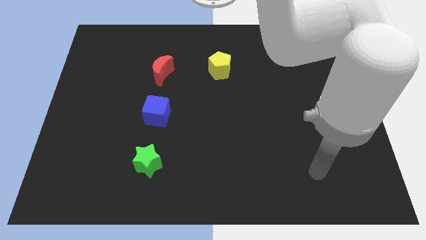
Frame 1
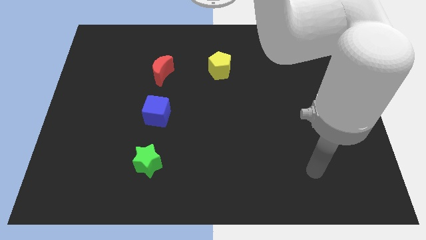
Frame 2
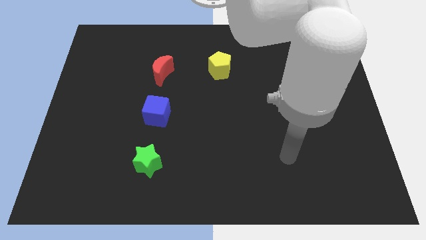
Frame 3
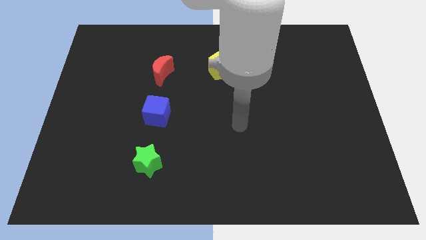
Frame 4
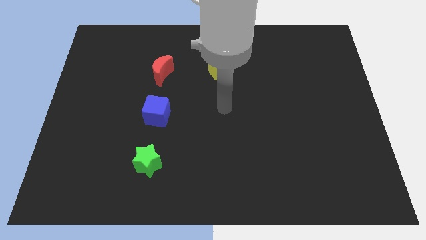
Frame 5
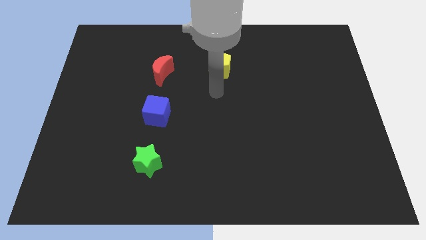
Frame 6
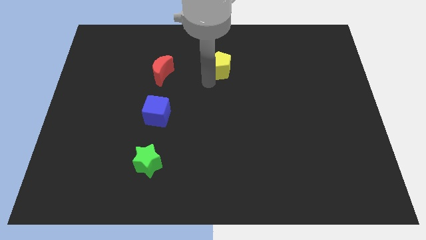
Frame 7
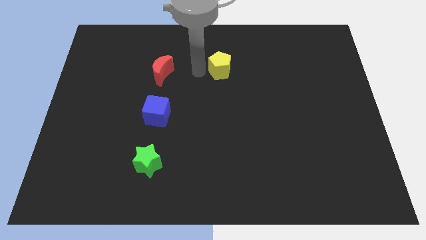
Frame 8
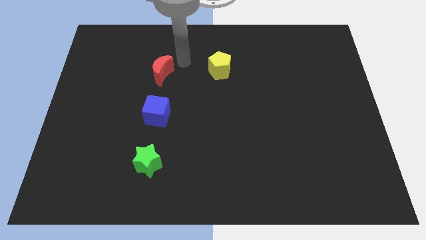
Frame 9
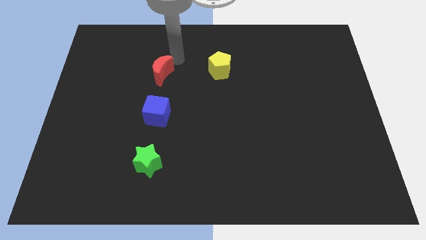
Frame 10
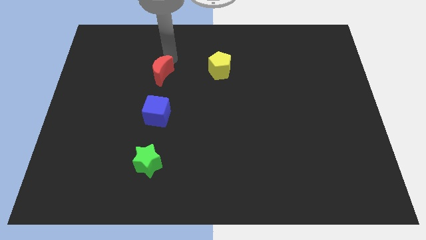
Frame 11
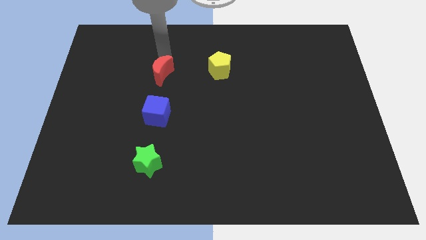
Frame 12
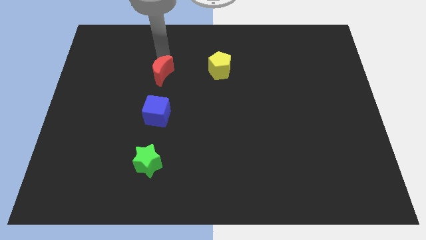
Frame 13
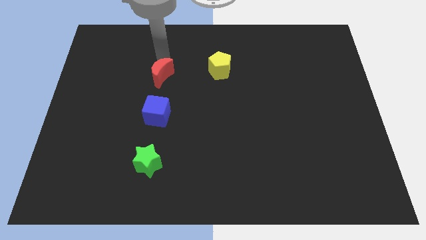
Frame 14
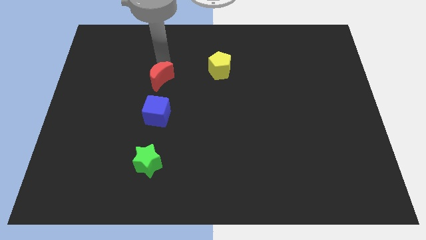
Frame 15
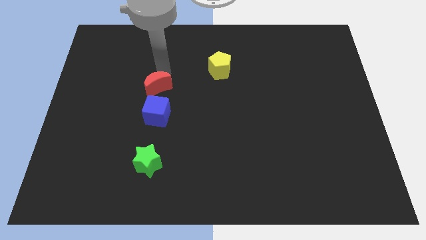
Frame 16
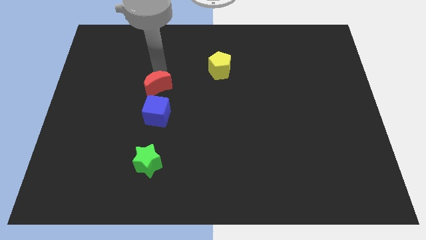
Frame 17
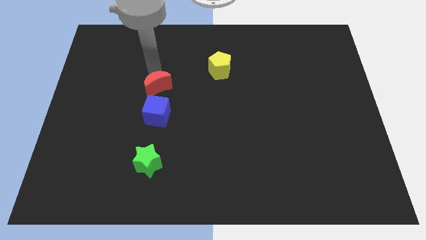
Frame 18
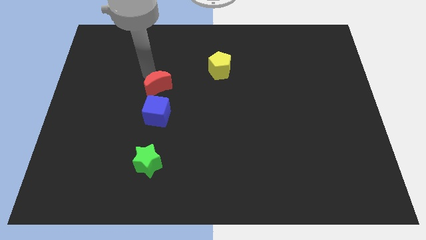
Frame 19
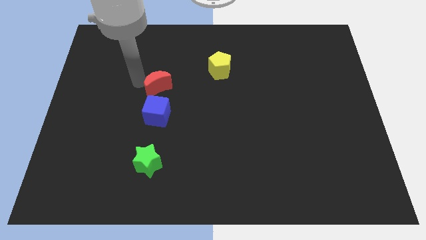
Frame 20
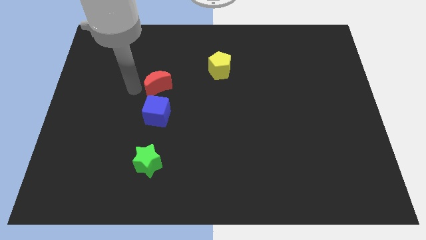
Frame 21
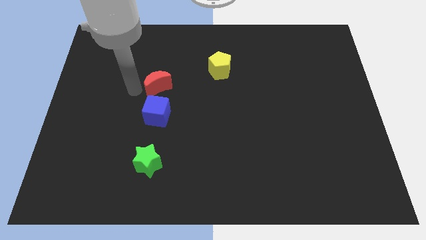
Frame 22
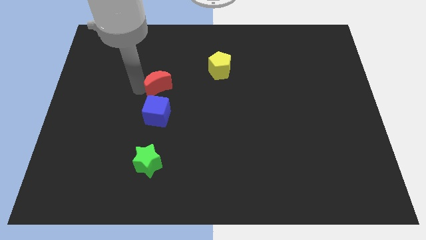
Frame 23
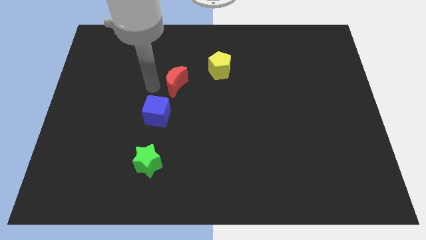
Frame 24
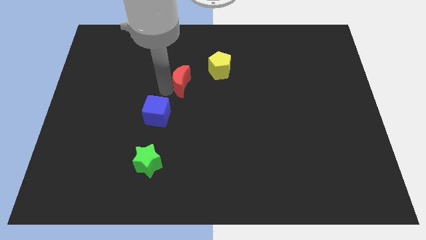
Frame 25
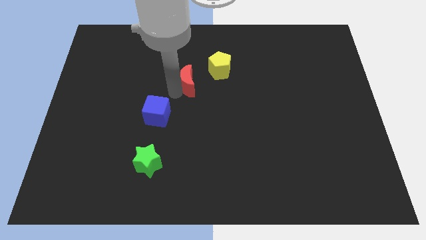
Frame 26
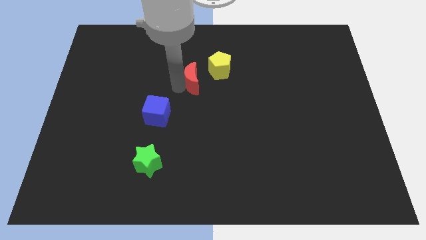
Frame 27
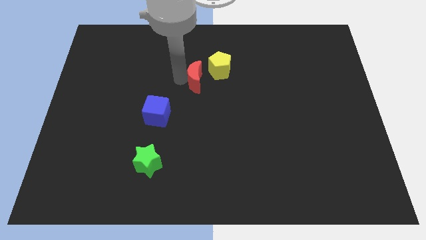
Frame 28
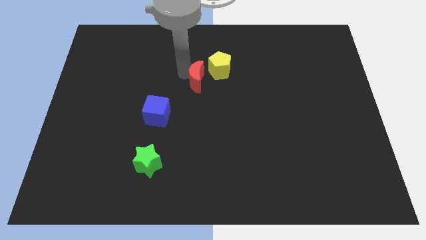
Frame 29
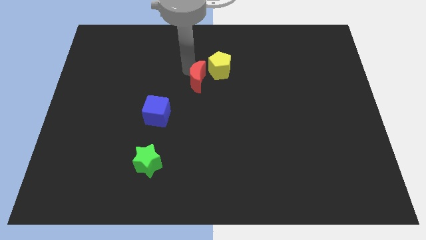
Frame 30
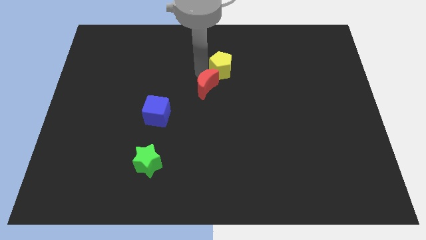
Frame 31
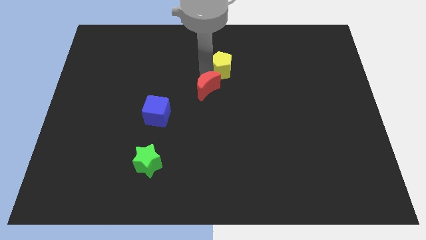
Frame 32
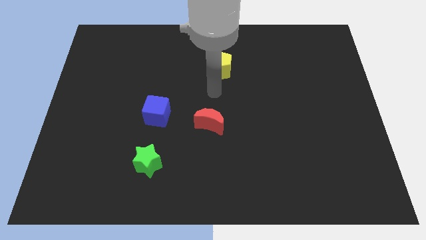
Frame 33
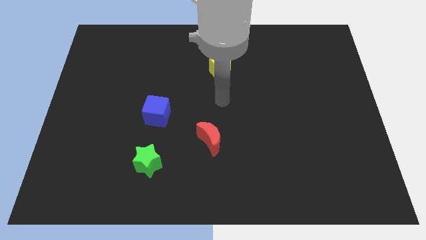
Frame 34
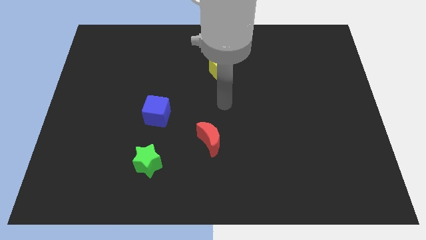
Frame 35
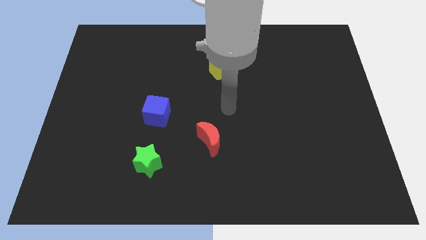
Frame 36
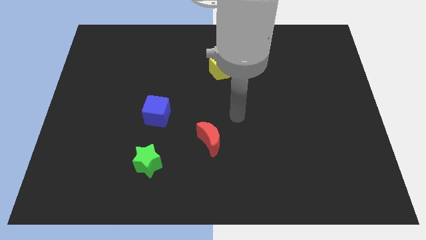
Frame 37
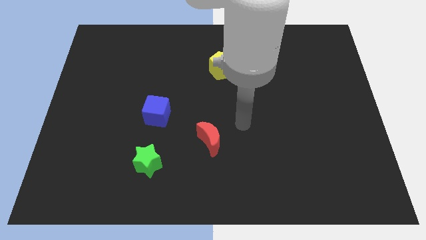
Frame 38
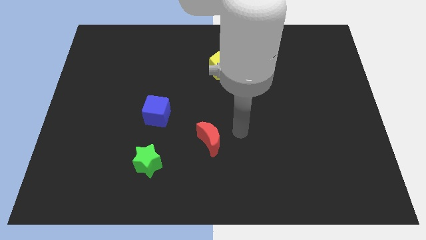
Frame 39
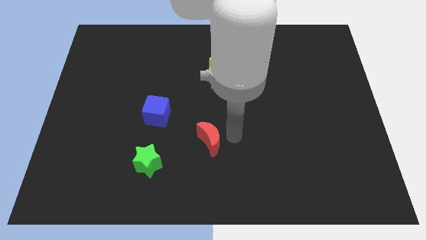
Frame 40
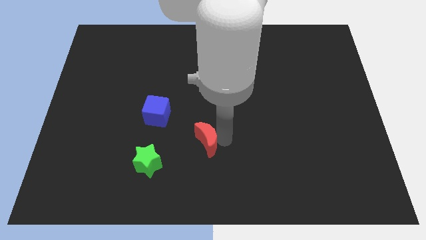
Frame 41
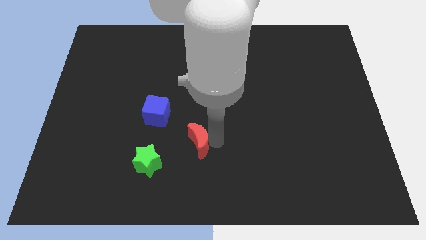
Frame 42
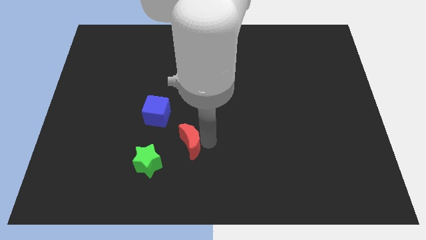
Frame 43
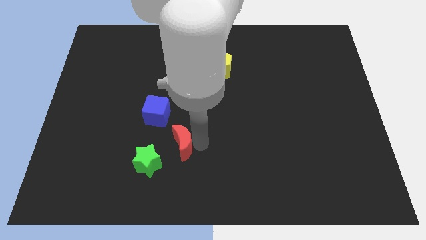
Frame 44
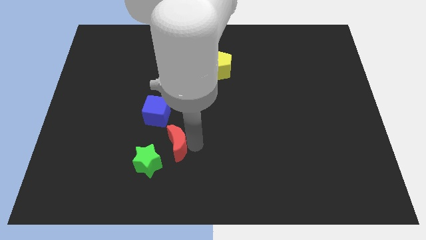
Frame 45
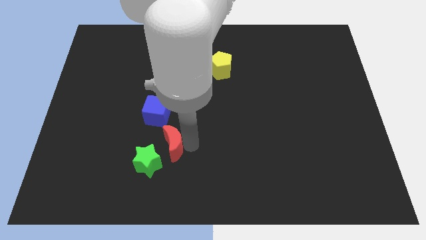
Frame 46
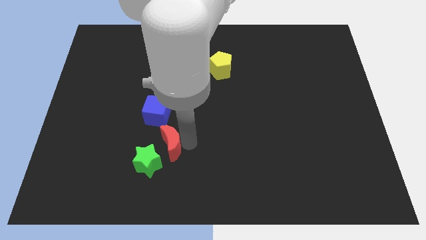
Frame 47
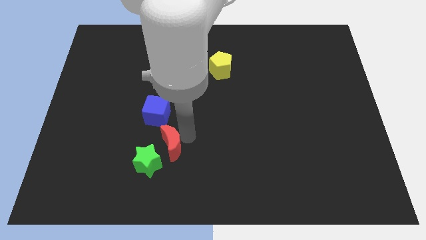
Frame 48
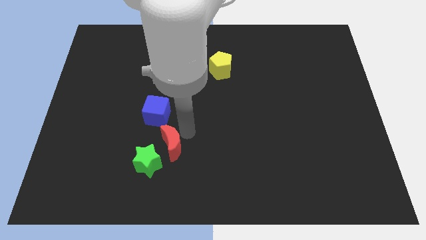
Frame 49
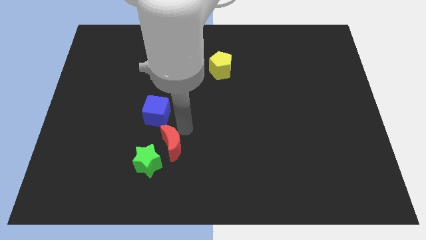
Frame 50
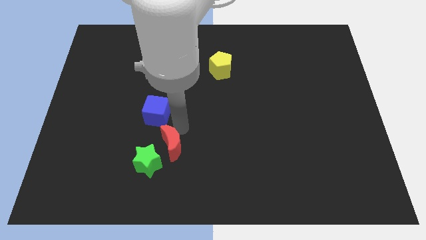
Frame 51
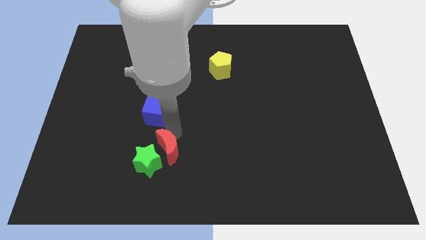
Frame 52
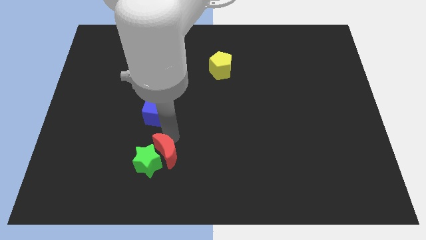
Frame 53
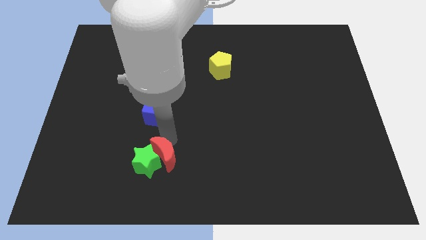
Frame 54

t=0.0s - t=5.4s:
move the moon next to the star

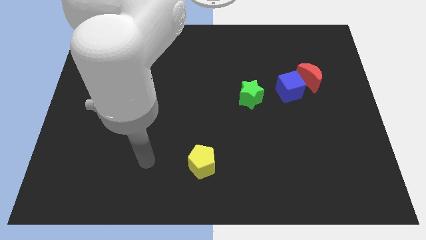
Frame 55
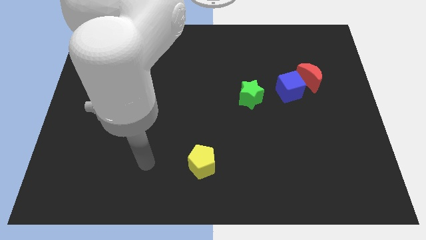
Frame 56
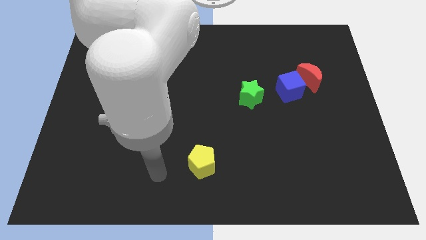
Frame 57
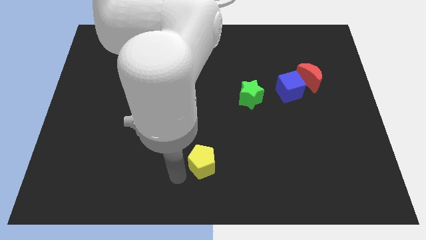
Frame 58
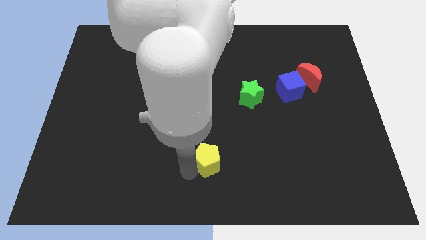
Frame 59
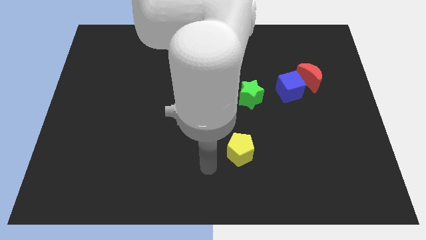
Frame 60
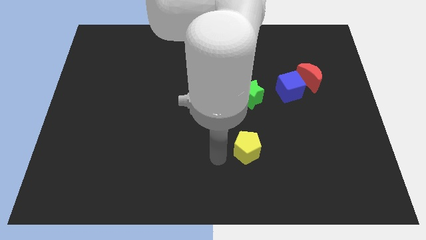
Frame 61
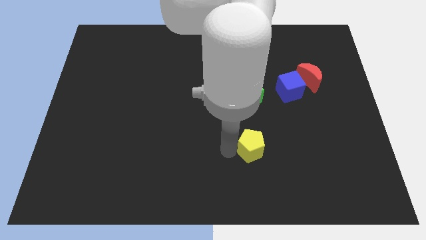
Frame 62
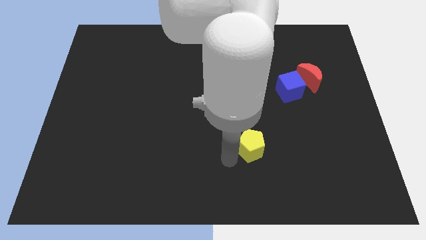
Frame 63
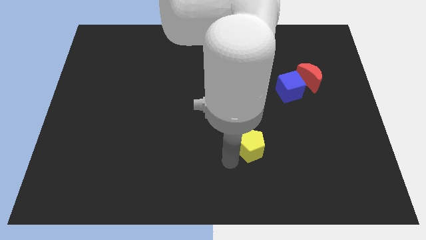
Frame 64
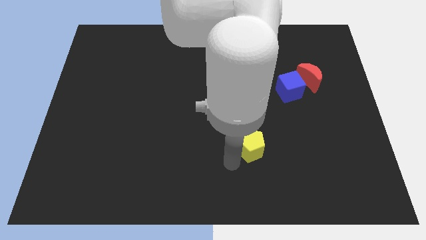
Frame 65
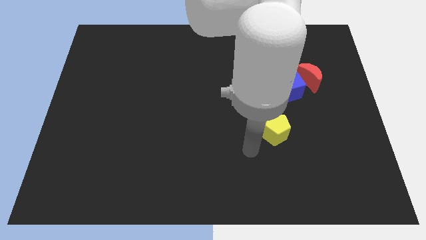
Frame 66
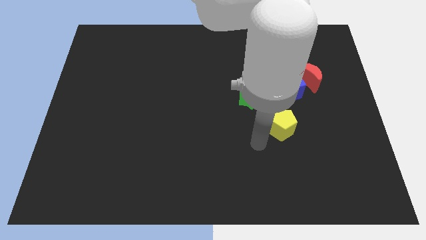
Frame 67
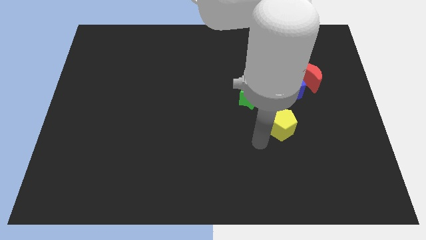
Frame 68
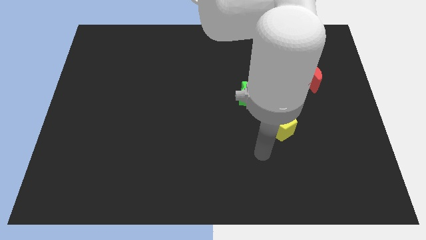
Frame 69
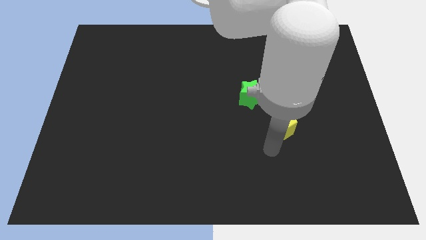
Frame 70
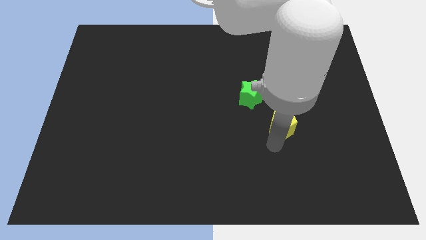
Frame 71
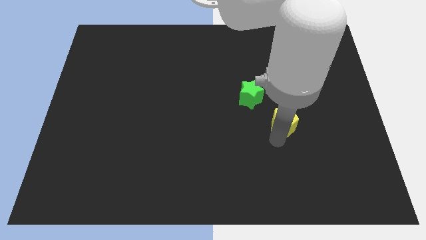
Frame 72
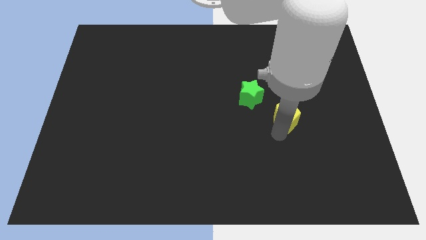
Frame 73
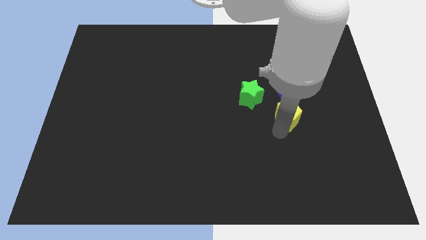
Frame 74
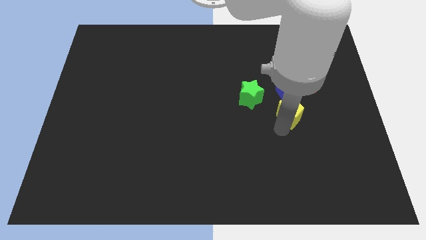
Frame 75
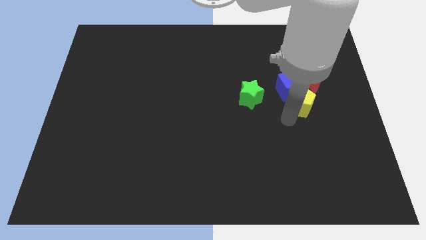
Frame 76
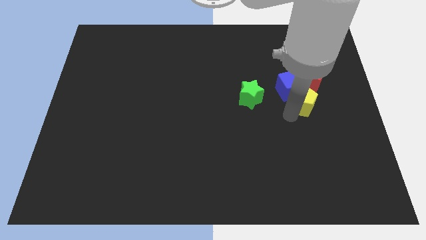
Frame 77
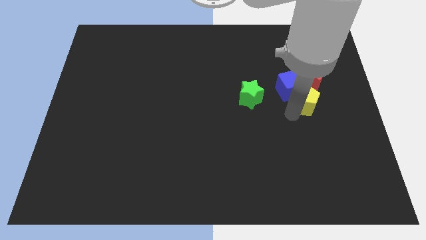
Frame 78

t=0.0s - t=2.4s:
move the yellow block next to the blue cube

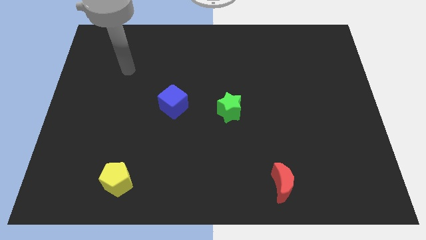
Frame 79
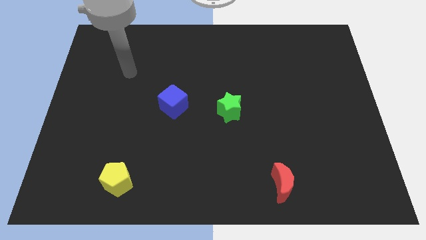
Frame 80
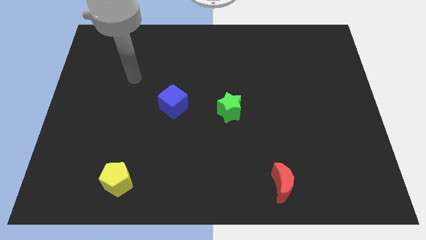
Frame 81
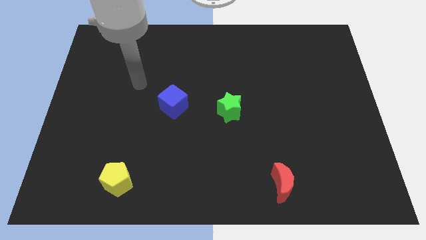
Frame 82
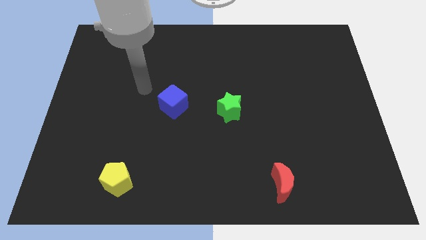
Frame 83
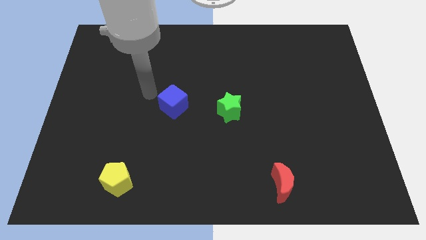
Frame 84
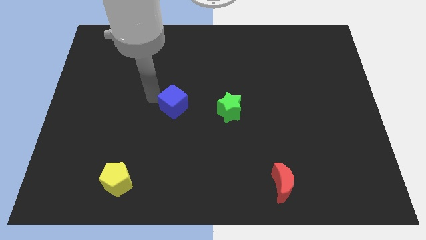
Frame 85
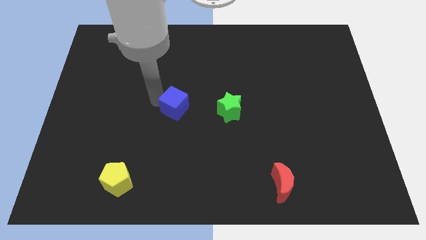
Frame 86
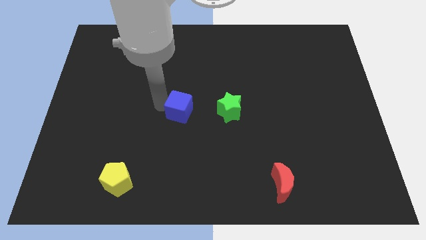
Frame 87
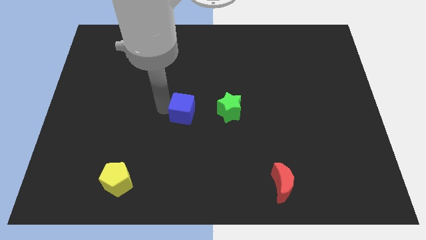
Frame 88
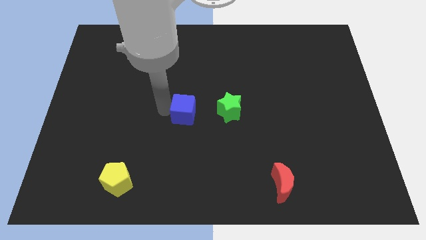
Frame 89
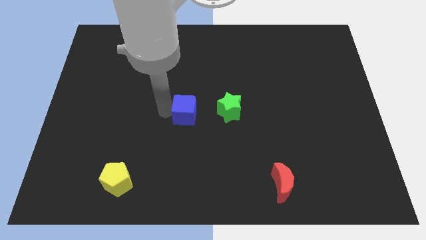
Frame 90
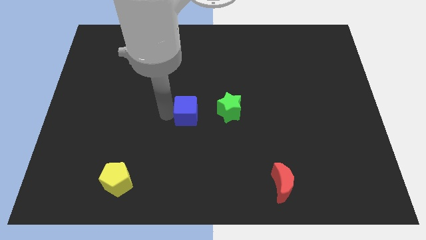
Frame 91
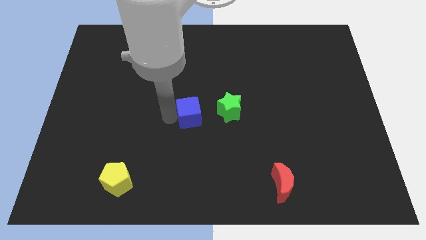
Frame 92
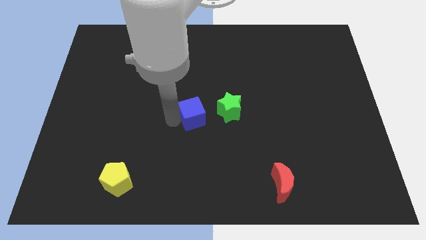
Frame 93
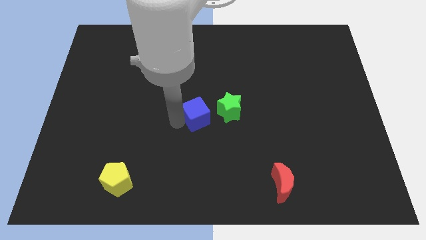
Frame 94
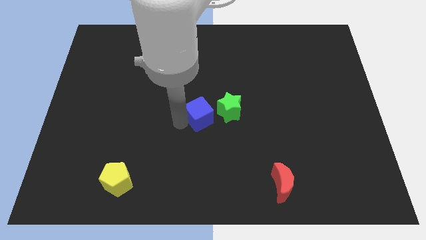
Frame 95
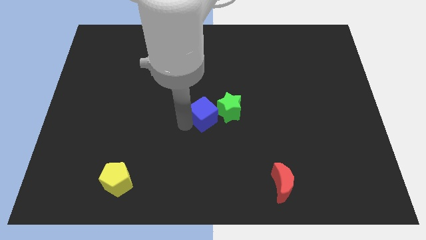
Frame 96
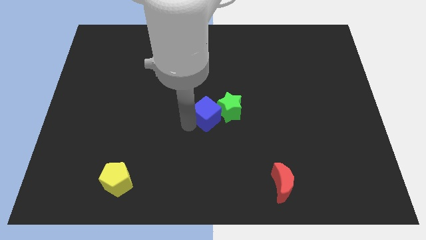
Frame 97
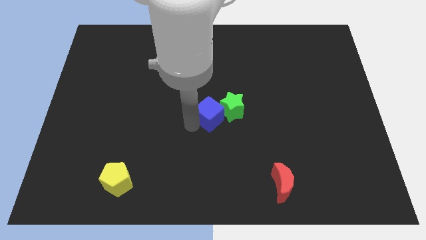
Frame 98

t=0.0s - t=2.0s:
put the blue cube to the green block
